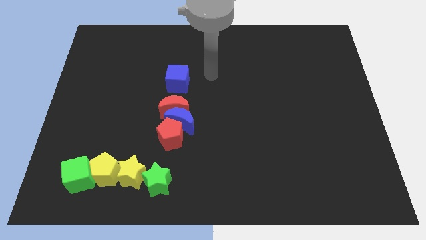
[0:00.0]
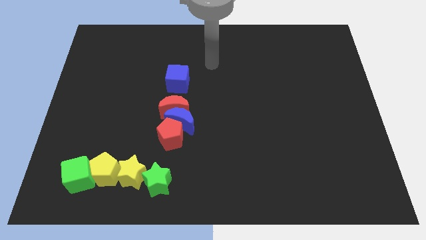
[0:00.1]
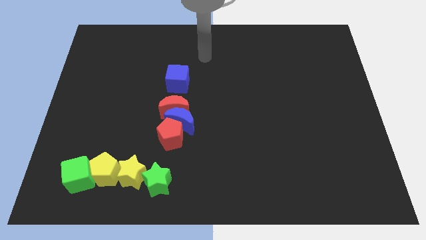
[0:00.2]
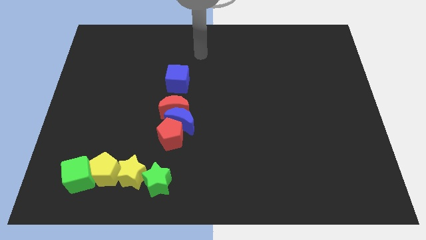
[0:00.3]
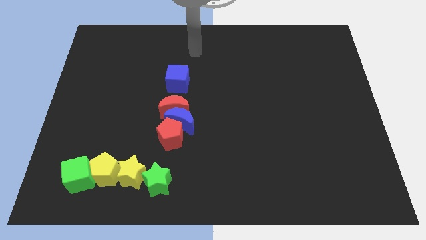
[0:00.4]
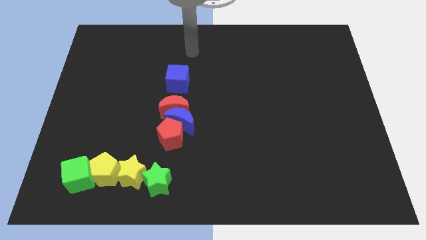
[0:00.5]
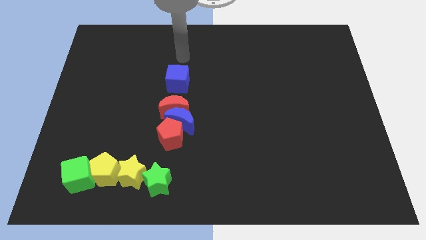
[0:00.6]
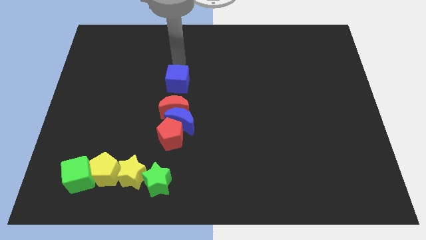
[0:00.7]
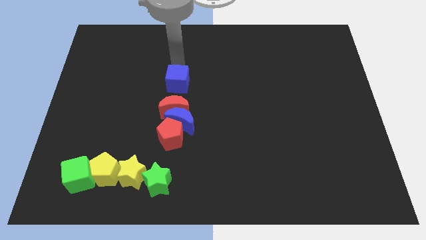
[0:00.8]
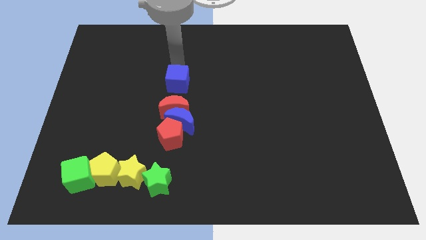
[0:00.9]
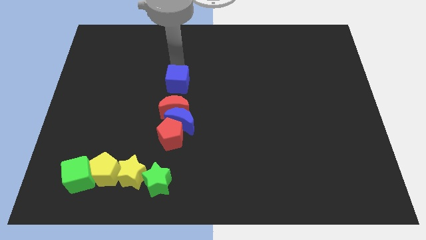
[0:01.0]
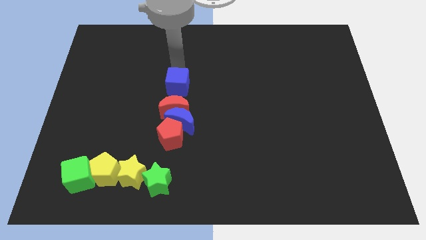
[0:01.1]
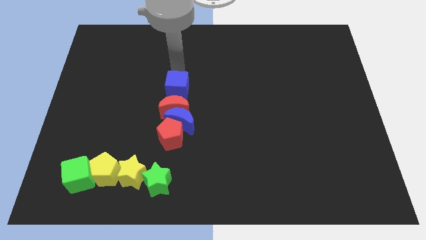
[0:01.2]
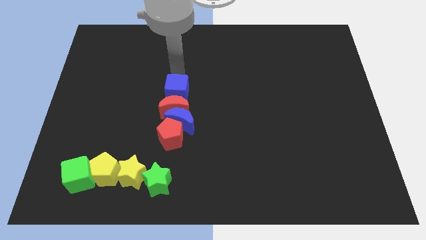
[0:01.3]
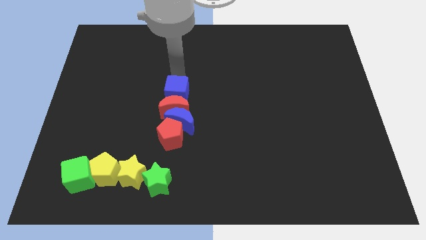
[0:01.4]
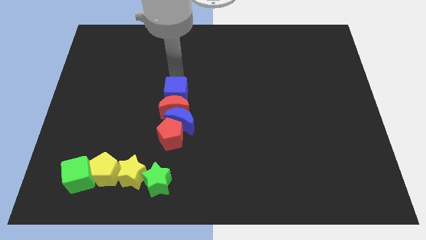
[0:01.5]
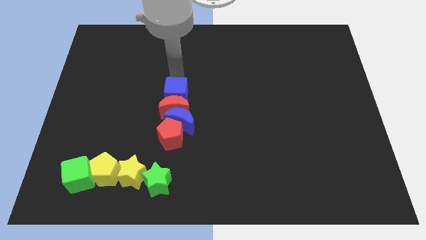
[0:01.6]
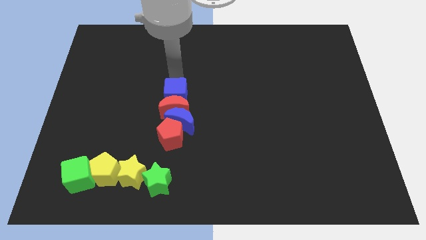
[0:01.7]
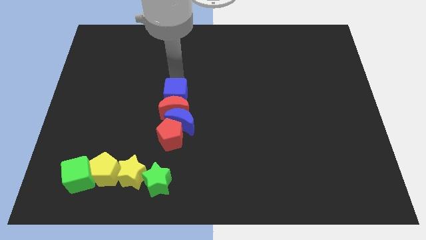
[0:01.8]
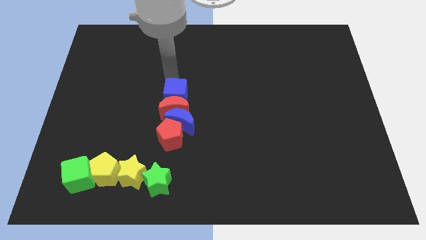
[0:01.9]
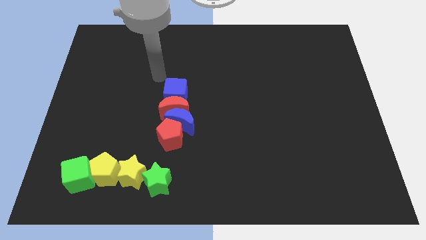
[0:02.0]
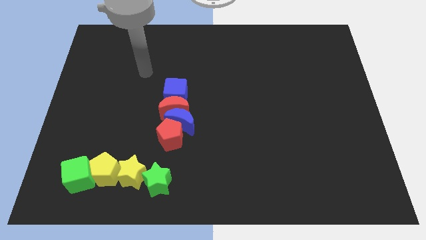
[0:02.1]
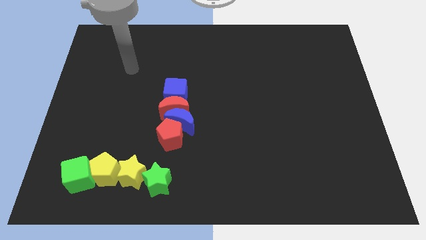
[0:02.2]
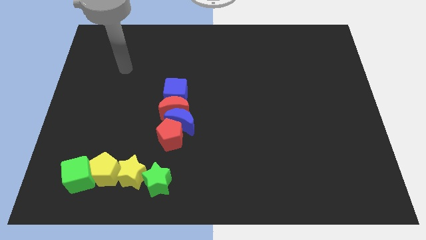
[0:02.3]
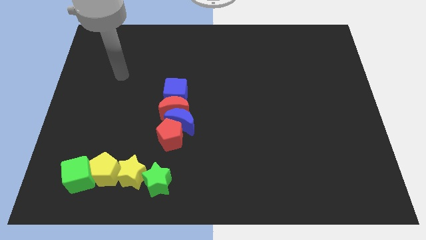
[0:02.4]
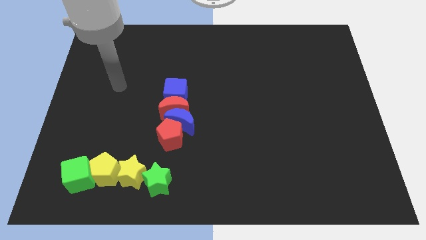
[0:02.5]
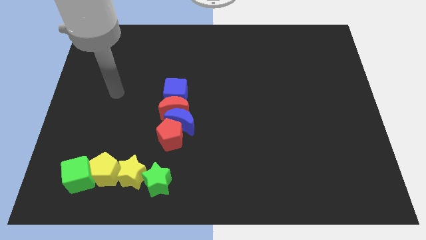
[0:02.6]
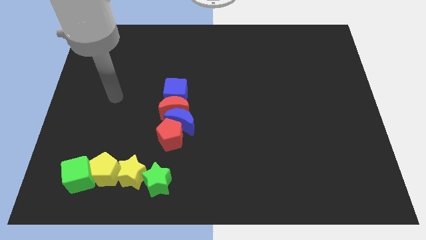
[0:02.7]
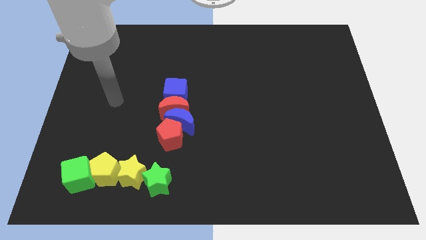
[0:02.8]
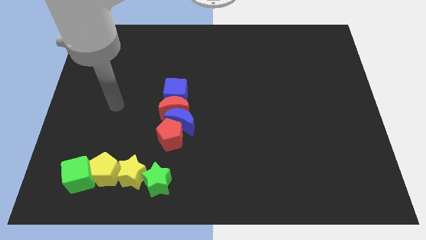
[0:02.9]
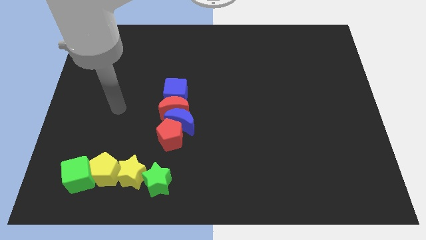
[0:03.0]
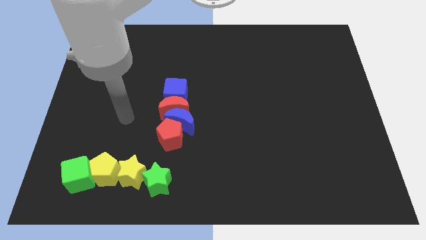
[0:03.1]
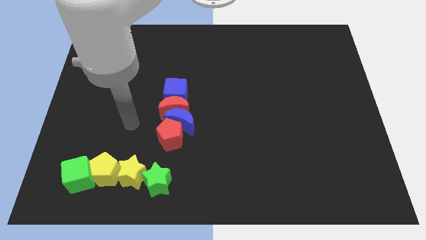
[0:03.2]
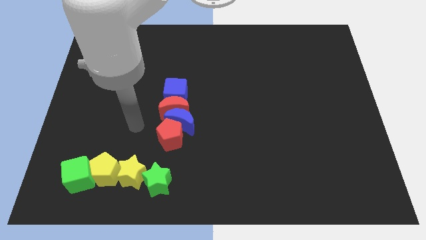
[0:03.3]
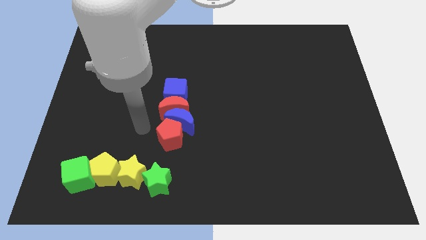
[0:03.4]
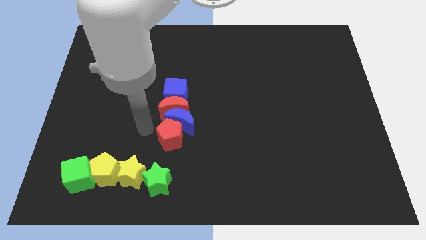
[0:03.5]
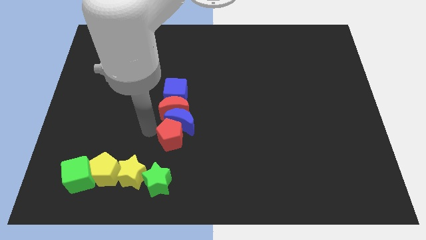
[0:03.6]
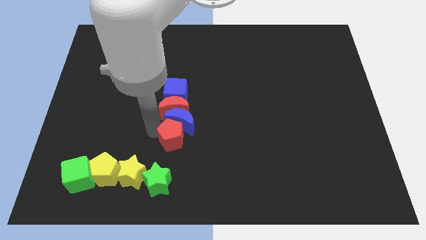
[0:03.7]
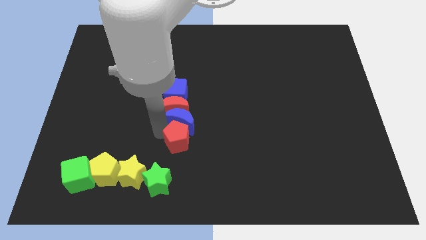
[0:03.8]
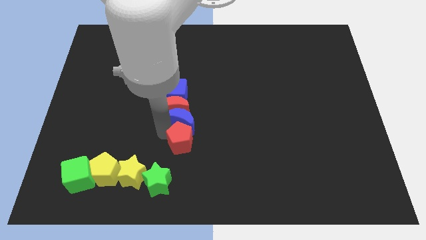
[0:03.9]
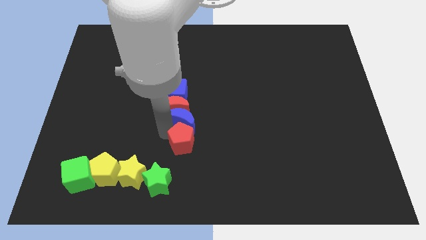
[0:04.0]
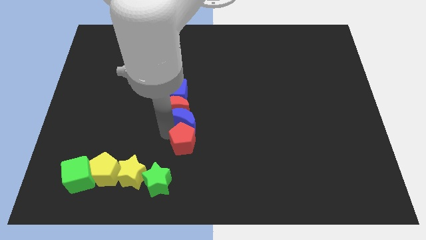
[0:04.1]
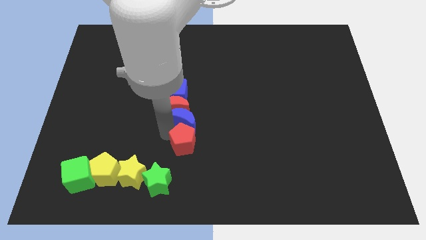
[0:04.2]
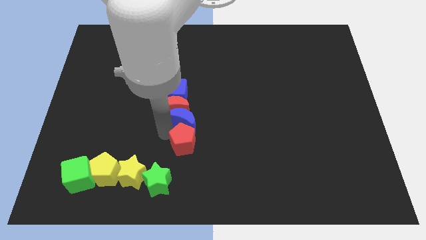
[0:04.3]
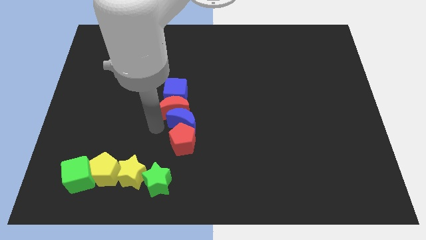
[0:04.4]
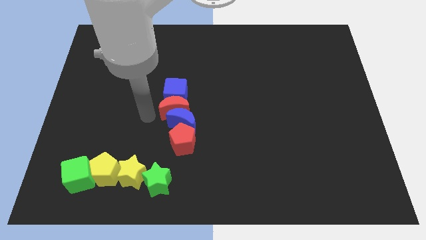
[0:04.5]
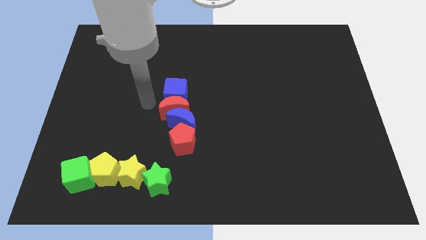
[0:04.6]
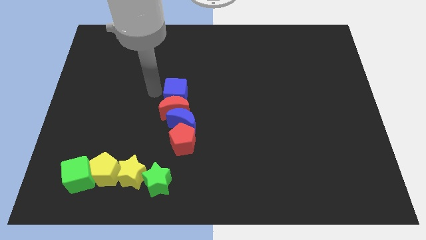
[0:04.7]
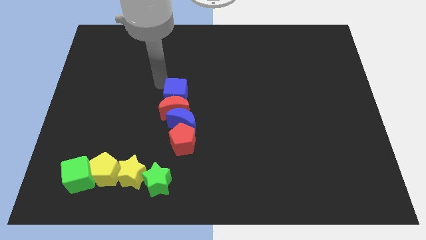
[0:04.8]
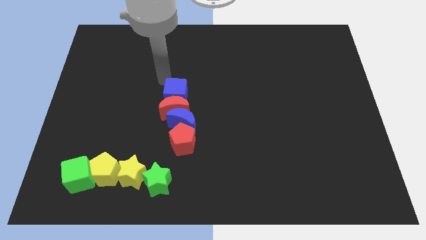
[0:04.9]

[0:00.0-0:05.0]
move the blue cube into a group of objects

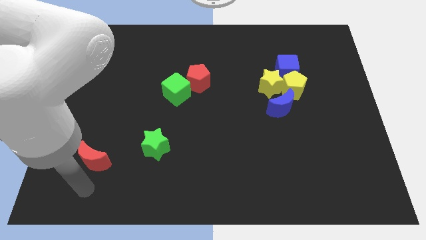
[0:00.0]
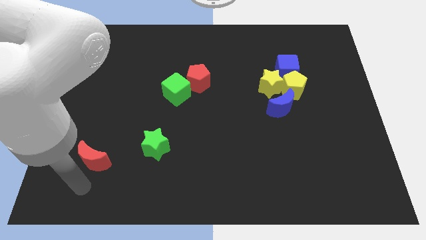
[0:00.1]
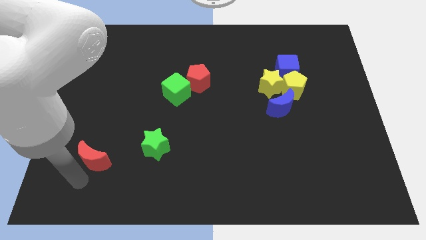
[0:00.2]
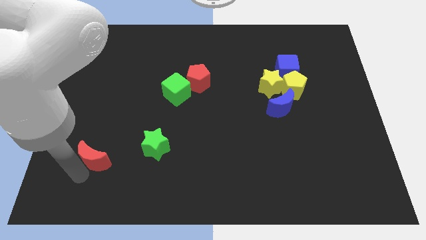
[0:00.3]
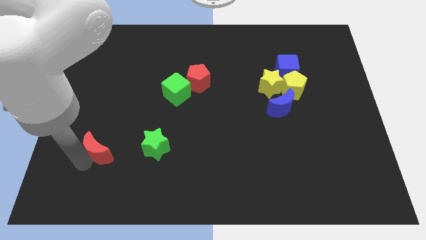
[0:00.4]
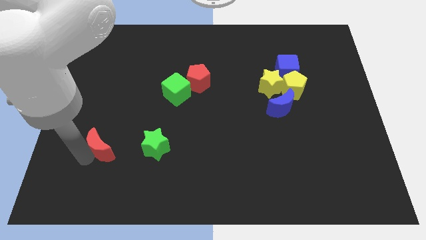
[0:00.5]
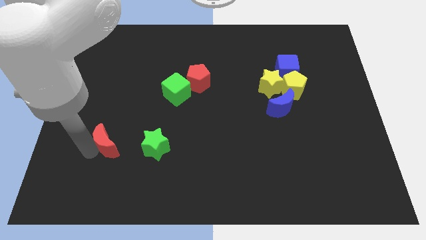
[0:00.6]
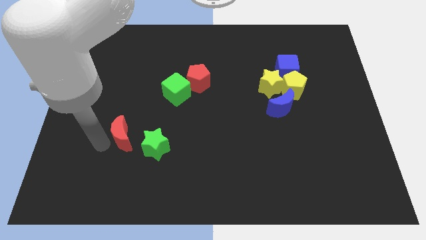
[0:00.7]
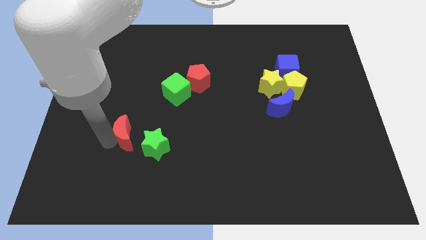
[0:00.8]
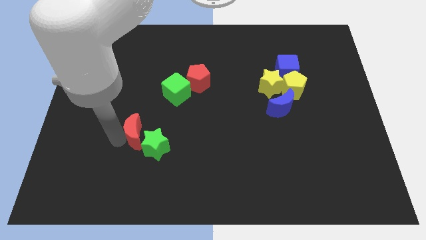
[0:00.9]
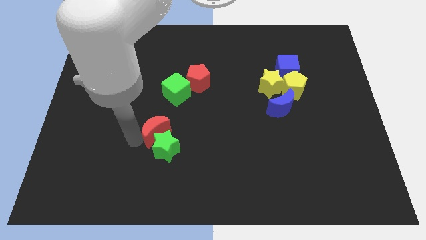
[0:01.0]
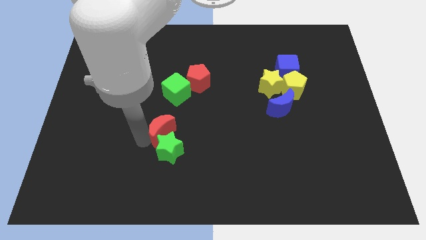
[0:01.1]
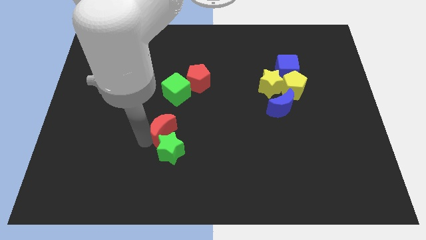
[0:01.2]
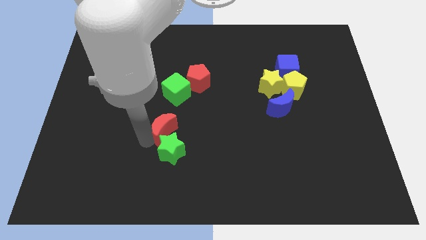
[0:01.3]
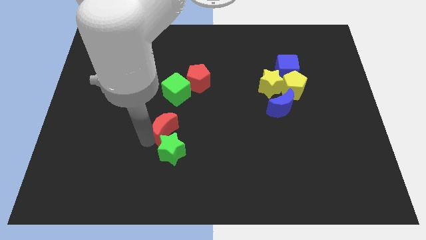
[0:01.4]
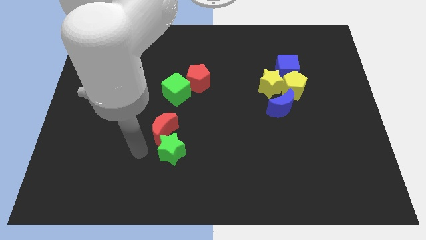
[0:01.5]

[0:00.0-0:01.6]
slide the red crescent into the top left side of the green star

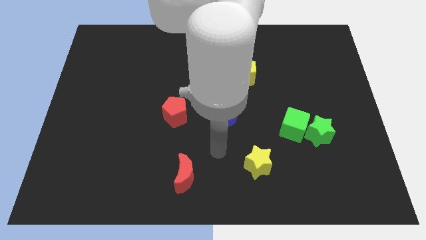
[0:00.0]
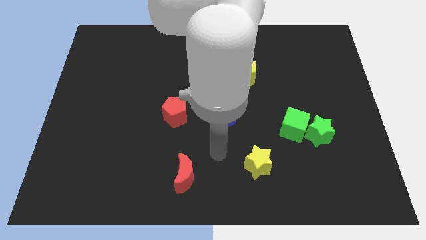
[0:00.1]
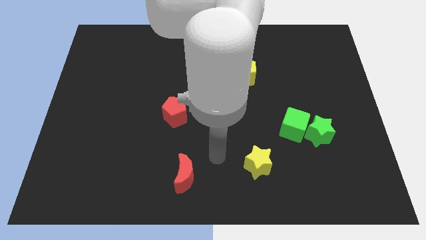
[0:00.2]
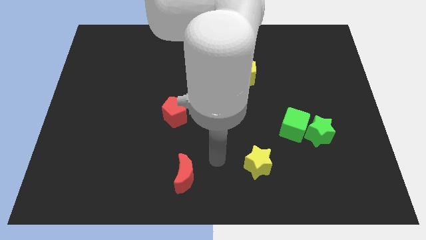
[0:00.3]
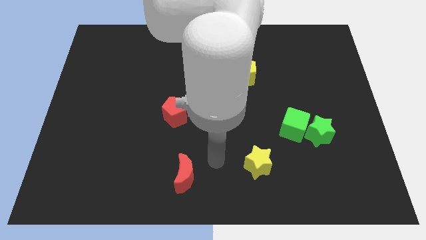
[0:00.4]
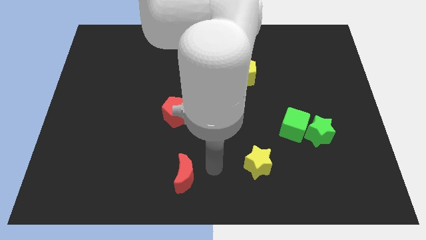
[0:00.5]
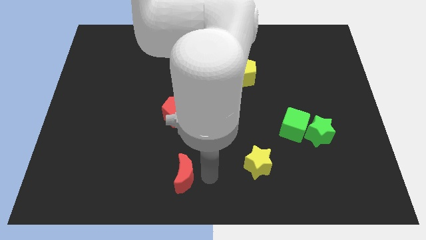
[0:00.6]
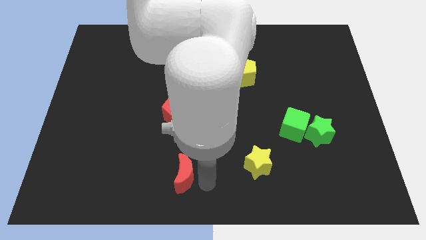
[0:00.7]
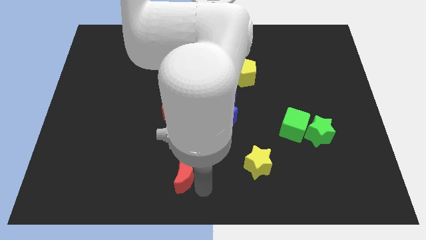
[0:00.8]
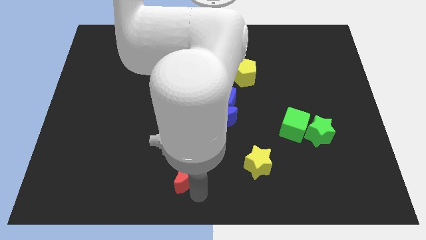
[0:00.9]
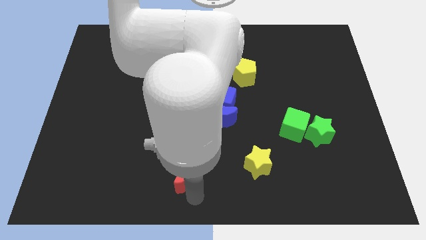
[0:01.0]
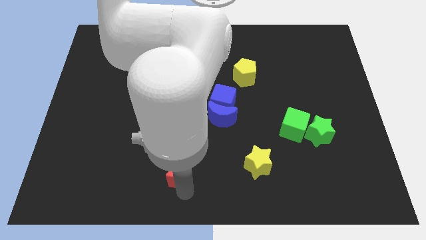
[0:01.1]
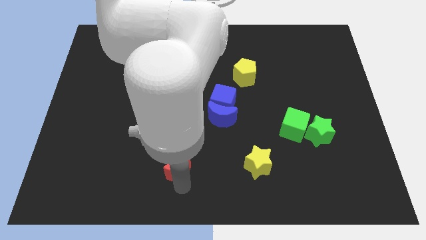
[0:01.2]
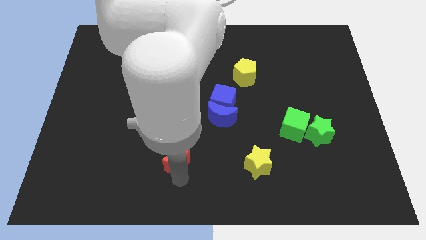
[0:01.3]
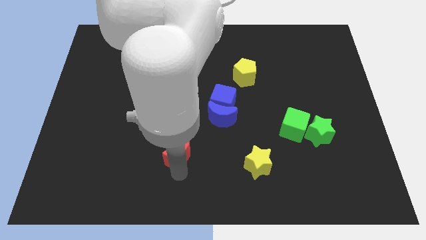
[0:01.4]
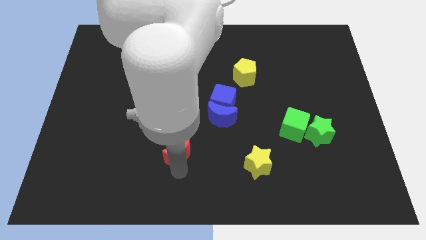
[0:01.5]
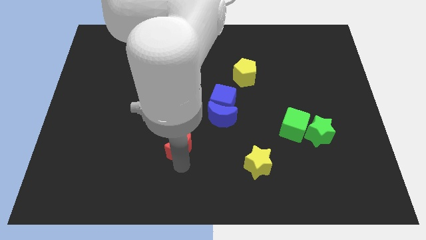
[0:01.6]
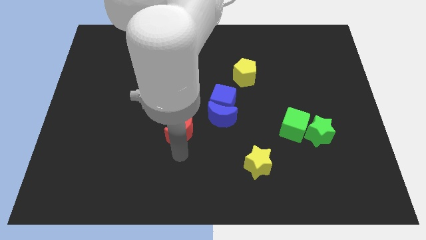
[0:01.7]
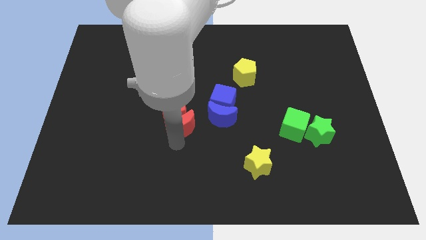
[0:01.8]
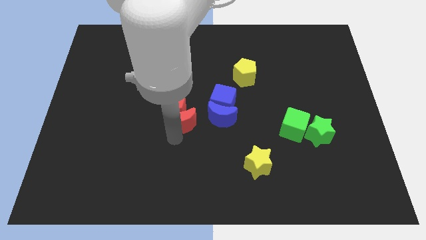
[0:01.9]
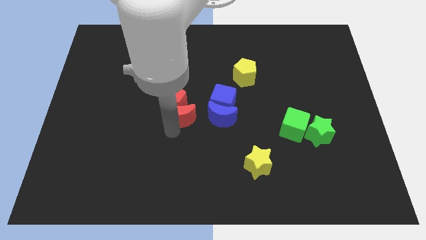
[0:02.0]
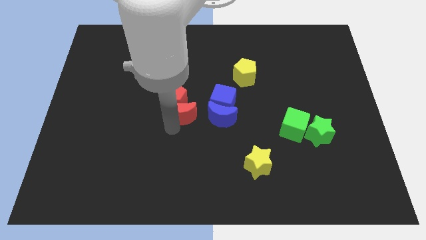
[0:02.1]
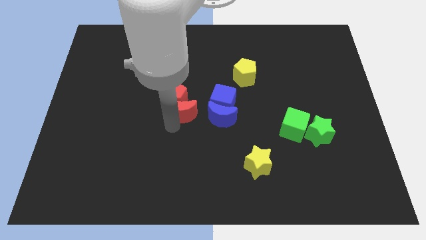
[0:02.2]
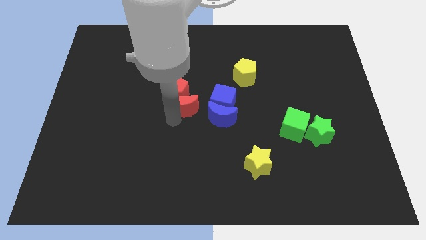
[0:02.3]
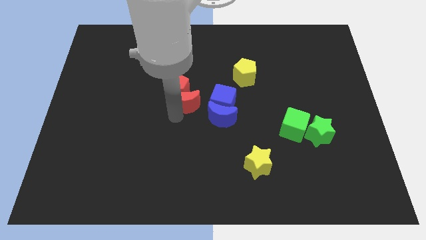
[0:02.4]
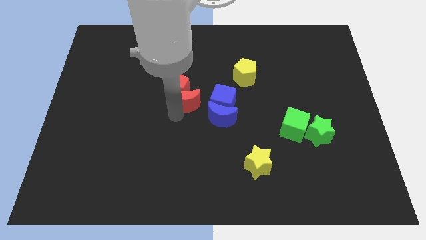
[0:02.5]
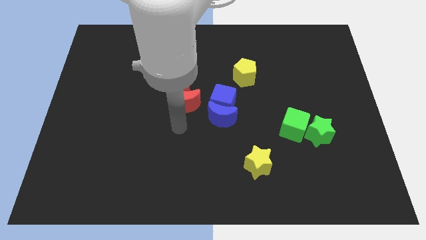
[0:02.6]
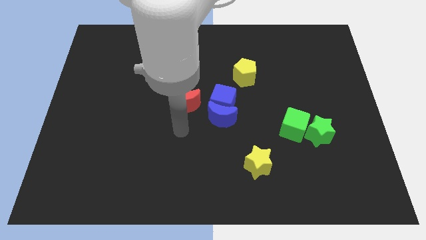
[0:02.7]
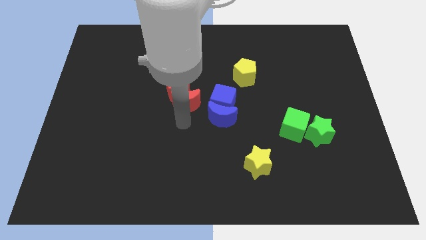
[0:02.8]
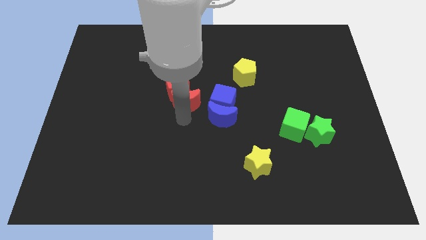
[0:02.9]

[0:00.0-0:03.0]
push the red crtescent into the red pentagon
